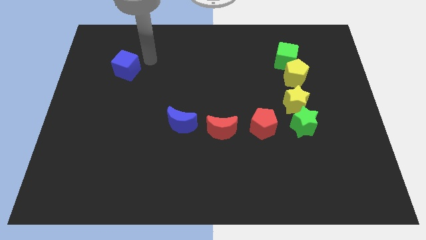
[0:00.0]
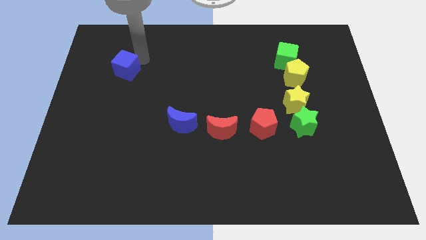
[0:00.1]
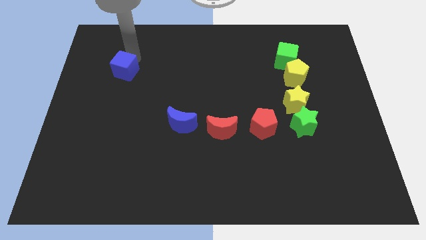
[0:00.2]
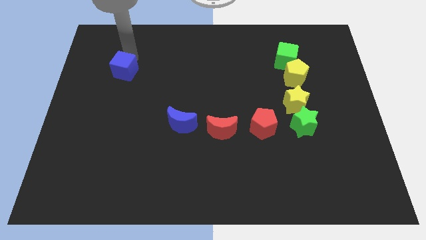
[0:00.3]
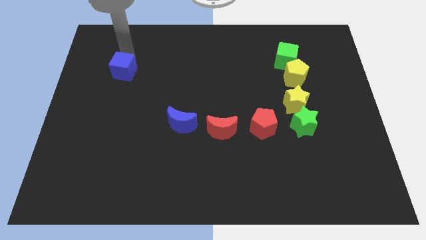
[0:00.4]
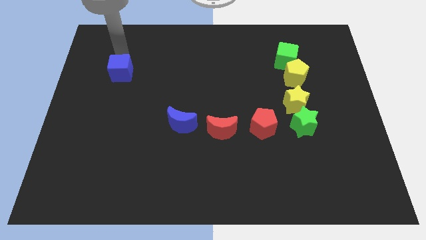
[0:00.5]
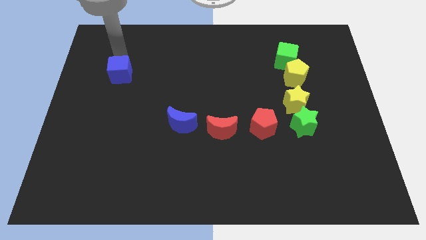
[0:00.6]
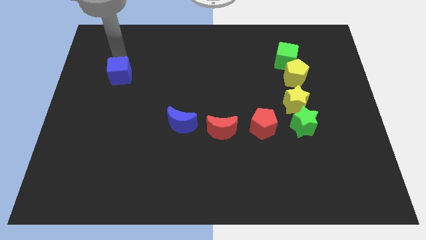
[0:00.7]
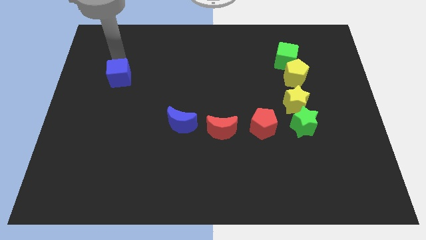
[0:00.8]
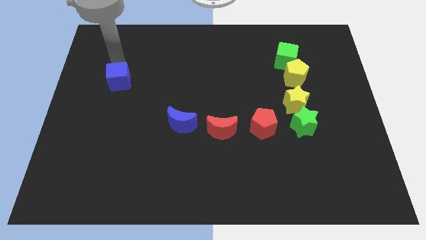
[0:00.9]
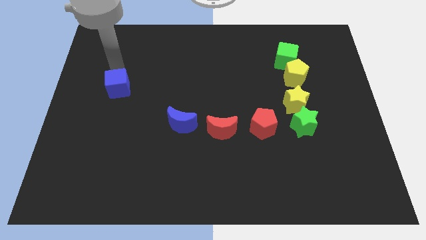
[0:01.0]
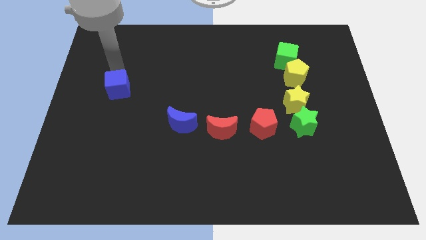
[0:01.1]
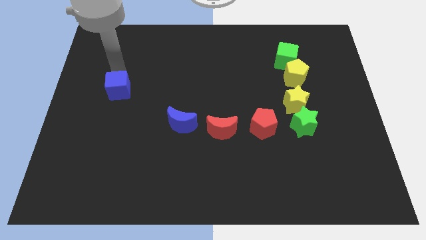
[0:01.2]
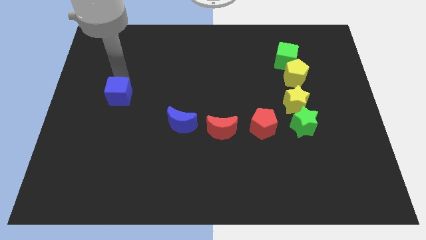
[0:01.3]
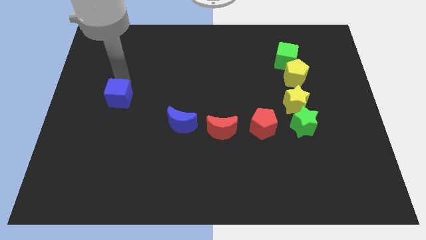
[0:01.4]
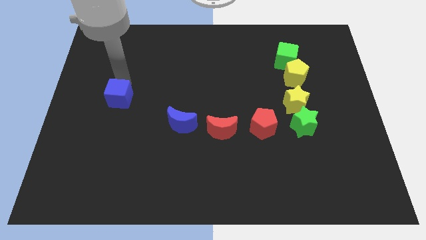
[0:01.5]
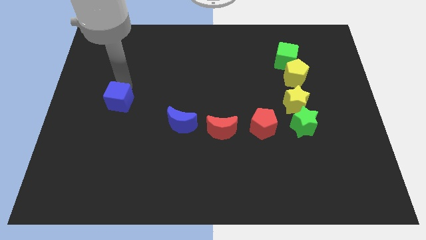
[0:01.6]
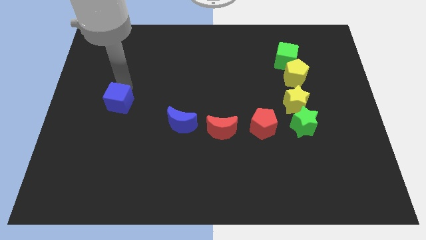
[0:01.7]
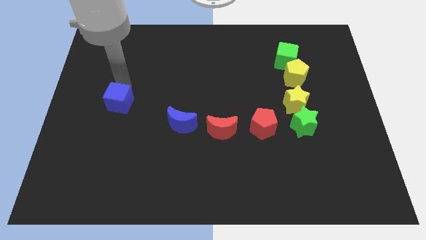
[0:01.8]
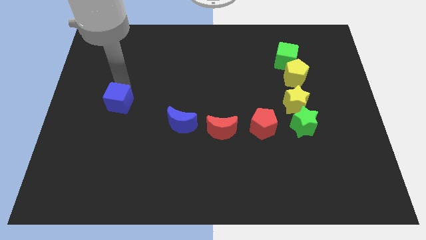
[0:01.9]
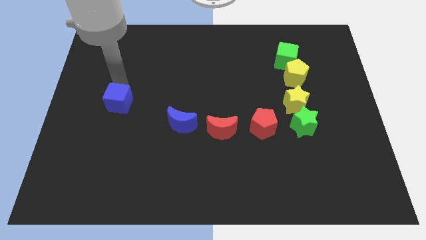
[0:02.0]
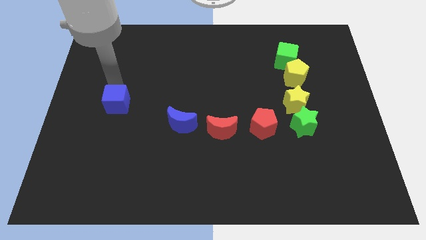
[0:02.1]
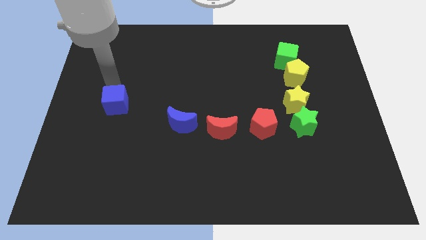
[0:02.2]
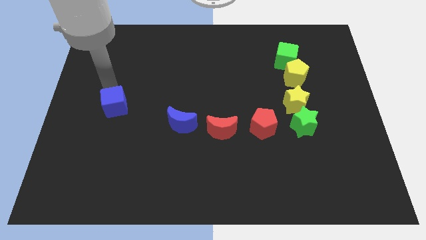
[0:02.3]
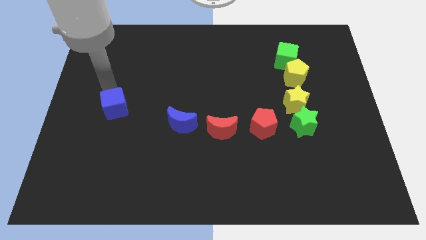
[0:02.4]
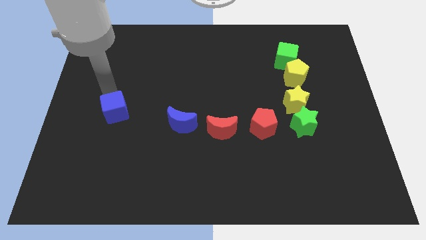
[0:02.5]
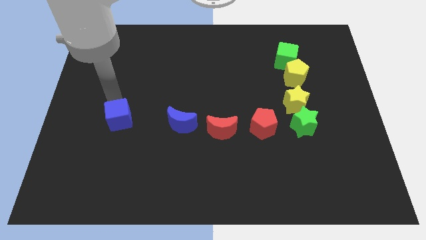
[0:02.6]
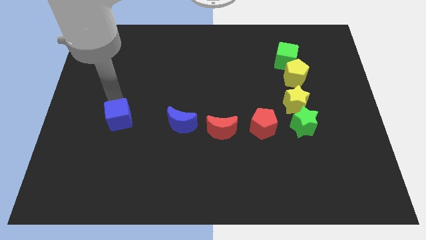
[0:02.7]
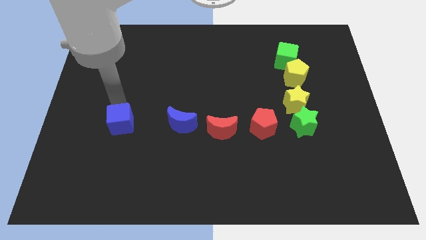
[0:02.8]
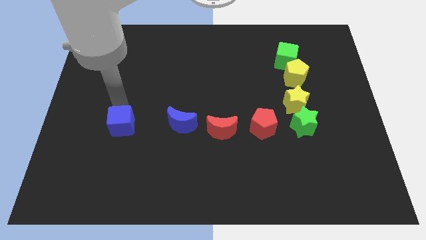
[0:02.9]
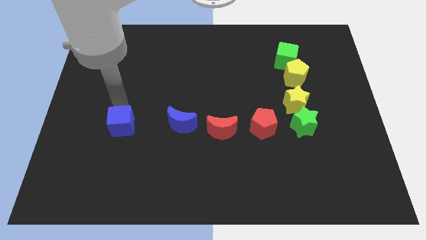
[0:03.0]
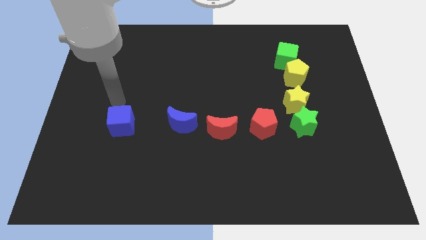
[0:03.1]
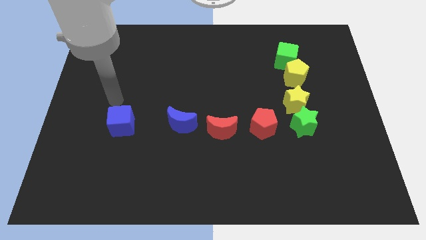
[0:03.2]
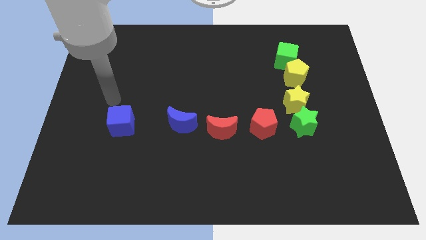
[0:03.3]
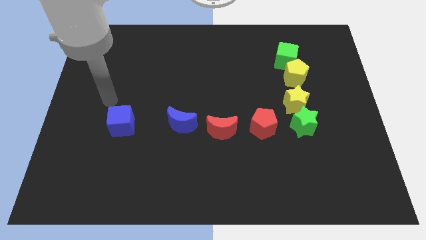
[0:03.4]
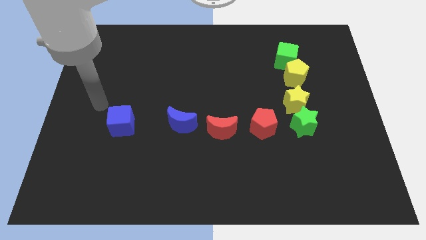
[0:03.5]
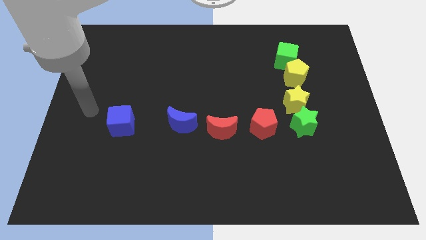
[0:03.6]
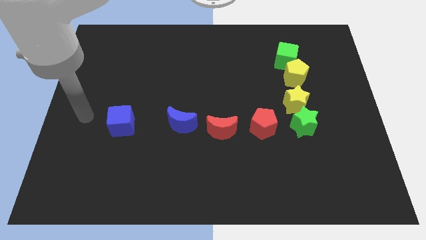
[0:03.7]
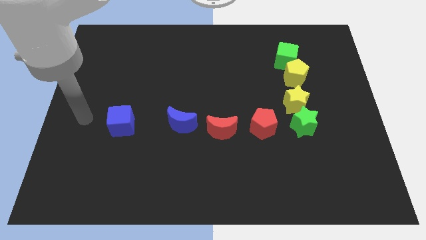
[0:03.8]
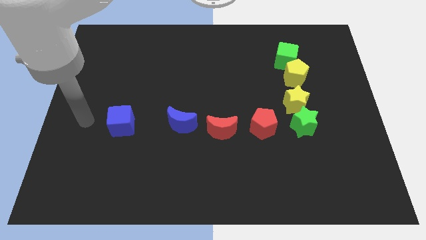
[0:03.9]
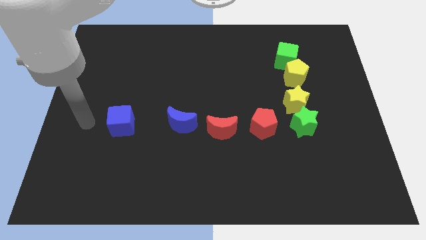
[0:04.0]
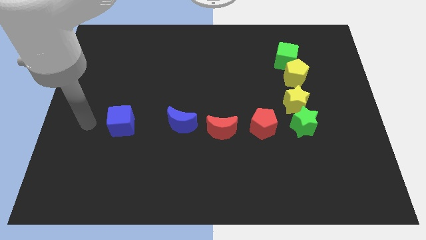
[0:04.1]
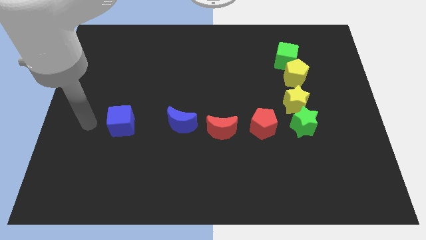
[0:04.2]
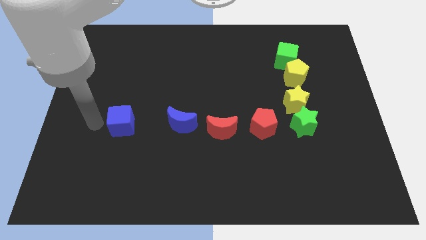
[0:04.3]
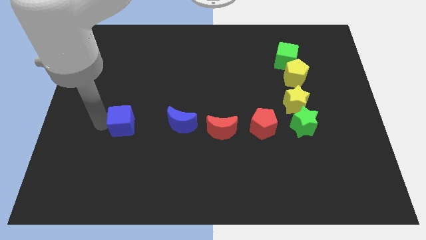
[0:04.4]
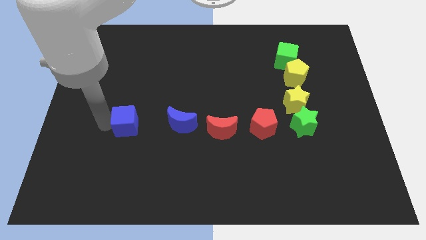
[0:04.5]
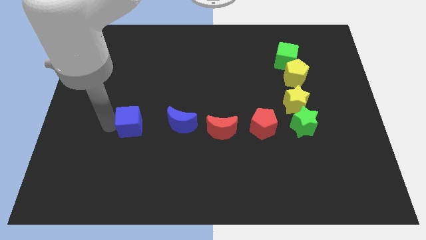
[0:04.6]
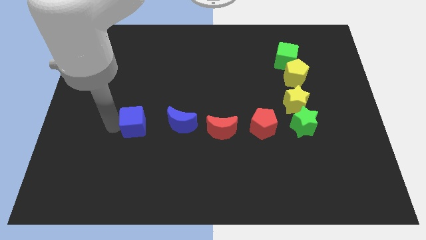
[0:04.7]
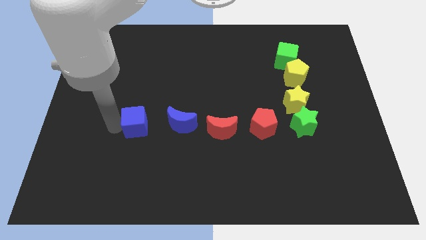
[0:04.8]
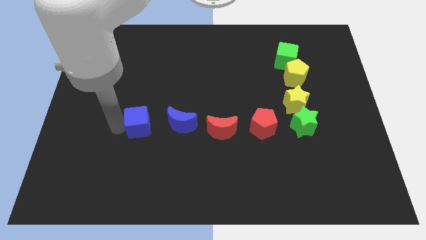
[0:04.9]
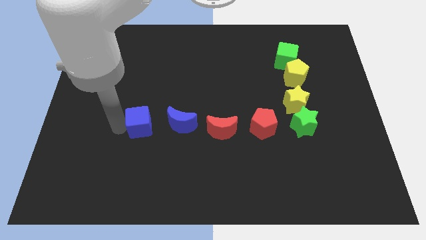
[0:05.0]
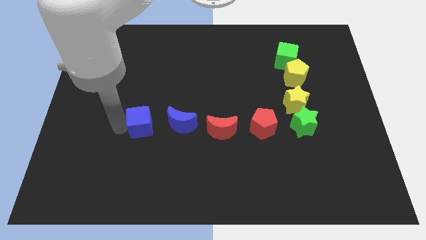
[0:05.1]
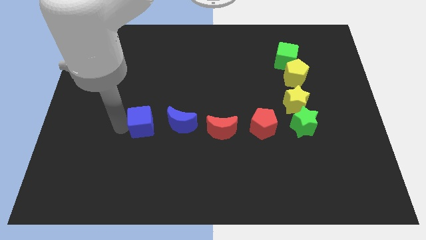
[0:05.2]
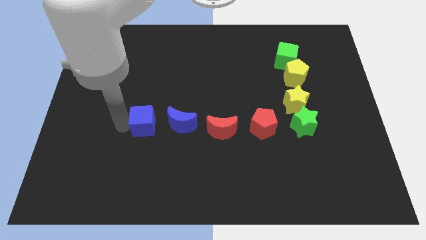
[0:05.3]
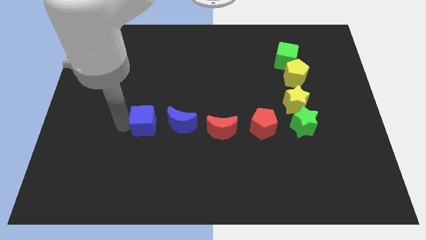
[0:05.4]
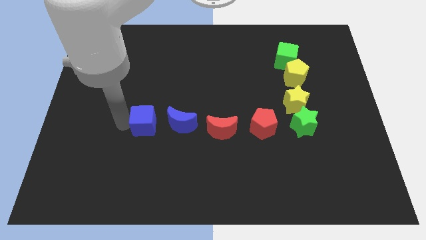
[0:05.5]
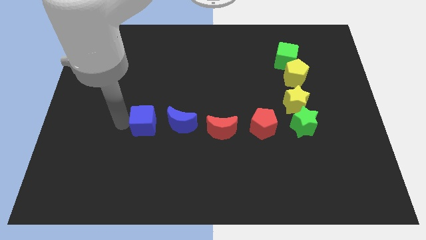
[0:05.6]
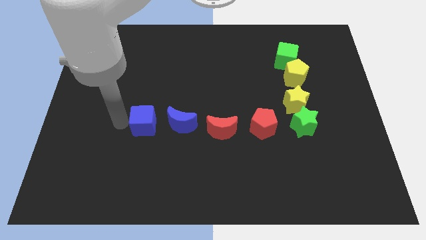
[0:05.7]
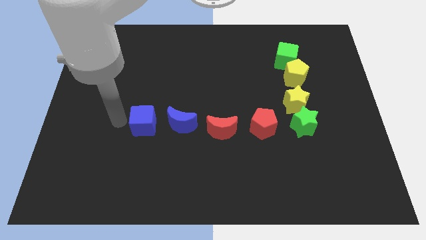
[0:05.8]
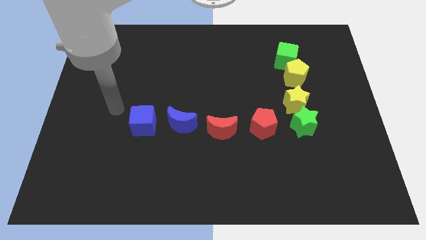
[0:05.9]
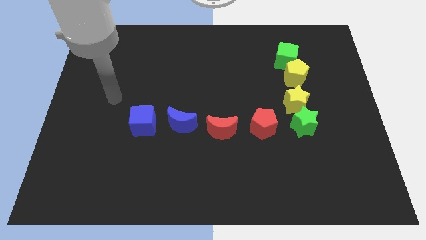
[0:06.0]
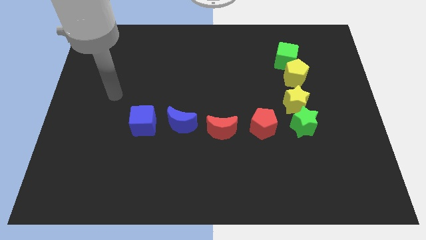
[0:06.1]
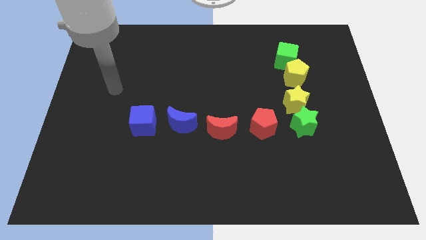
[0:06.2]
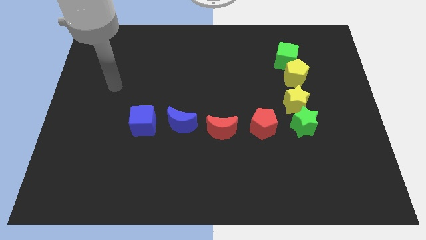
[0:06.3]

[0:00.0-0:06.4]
place the blue cube to the left of blue moon

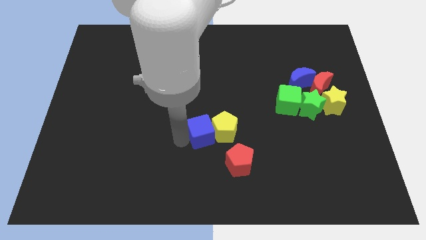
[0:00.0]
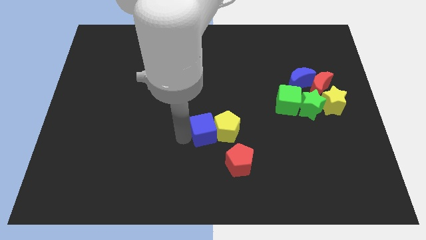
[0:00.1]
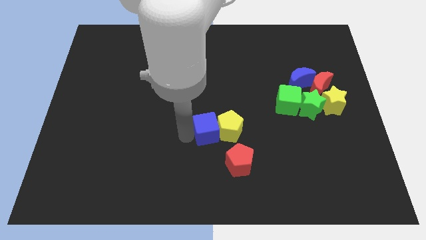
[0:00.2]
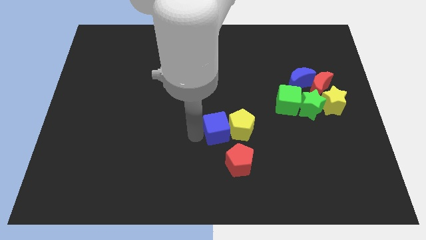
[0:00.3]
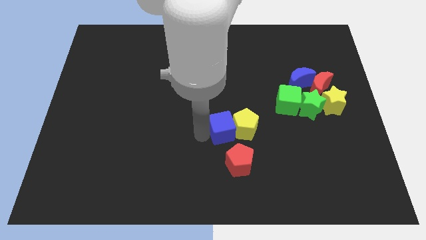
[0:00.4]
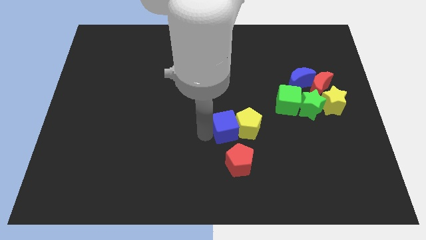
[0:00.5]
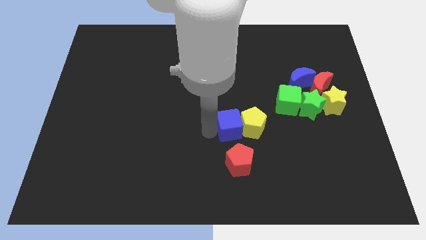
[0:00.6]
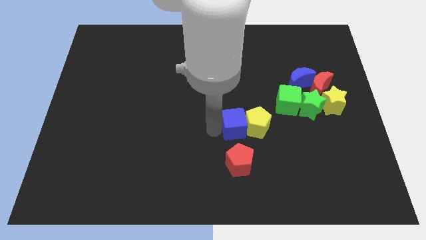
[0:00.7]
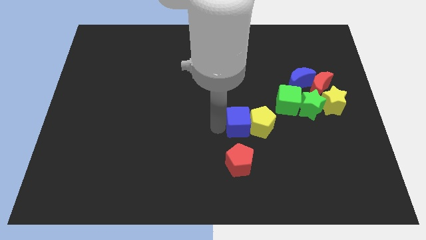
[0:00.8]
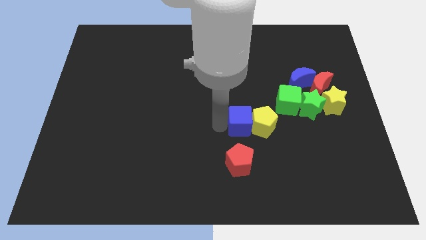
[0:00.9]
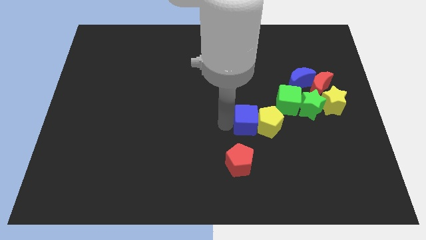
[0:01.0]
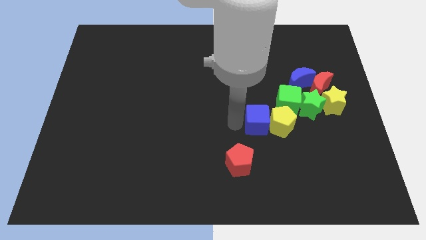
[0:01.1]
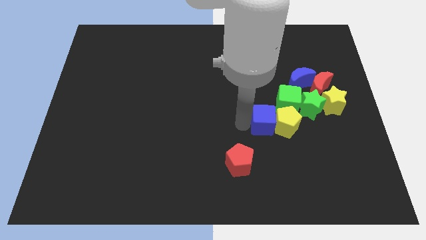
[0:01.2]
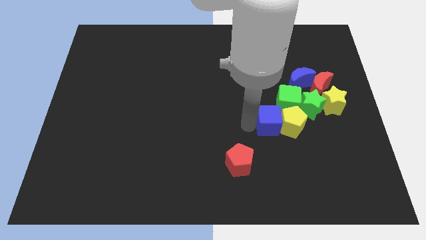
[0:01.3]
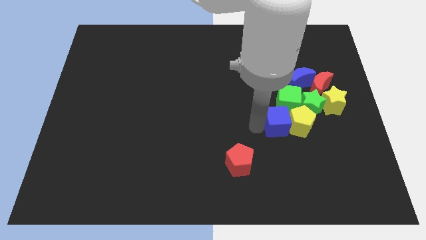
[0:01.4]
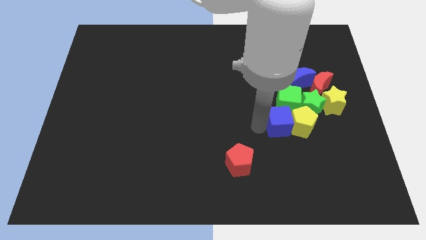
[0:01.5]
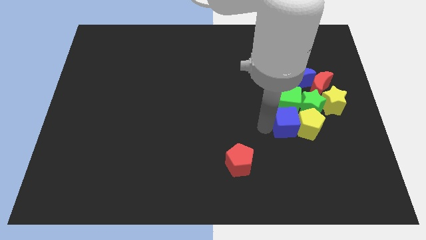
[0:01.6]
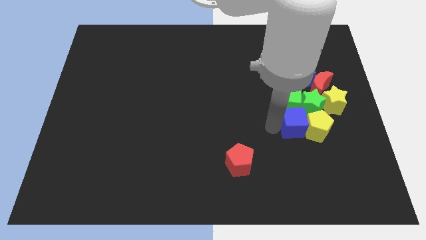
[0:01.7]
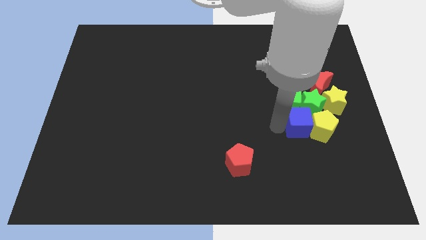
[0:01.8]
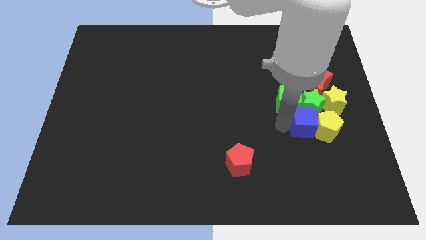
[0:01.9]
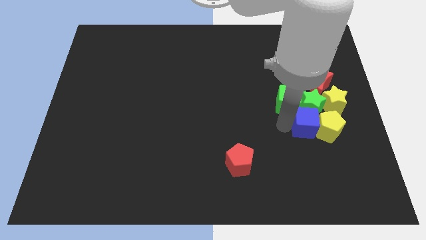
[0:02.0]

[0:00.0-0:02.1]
slide blue cube and yellow pentagon below the group of blocks

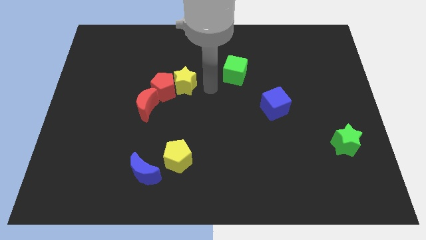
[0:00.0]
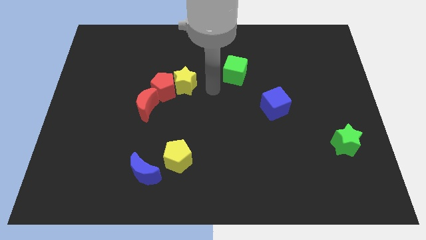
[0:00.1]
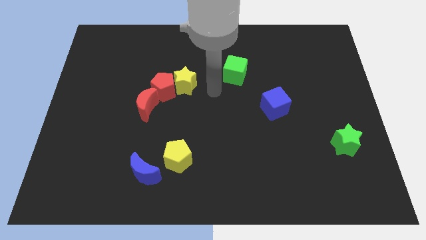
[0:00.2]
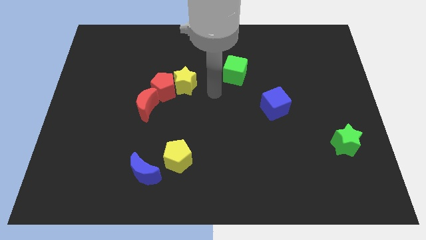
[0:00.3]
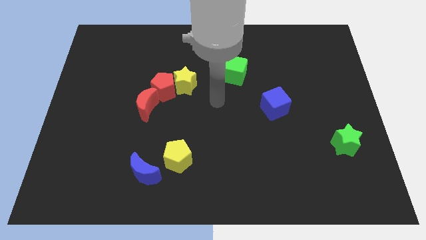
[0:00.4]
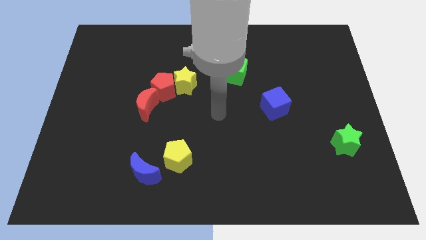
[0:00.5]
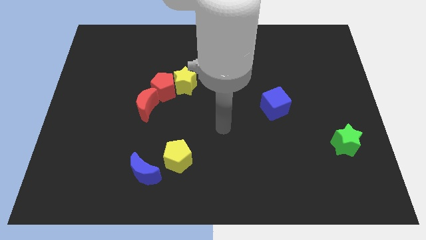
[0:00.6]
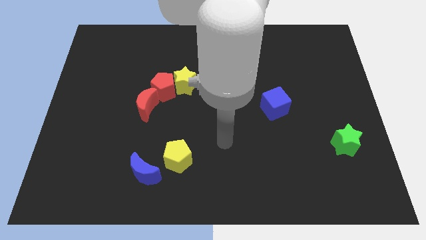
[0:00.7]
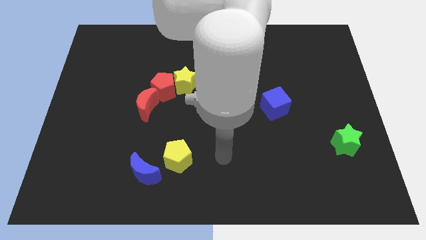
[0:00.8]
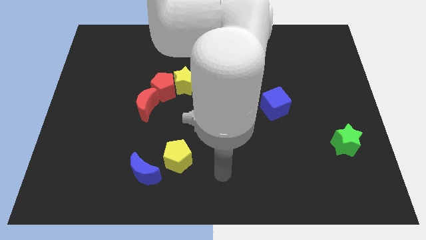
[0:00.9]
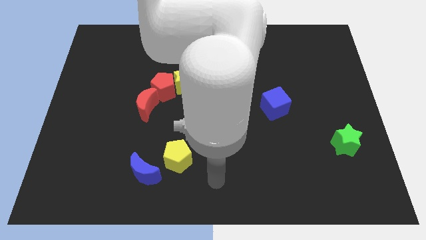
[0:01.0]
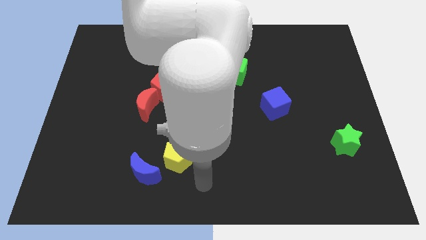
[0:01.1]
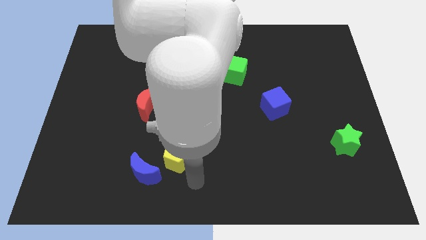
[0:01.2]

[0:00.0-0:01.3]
move your arm to the bottom right of the yellow pentagon
